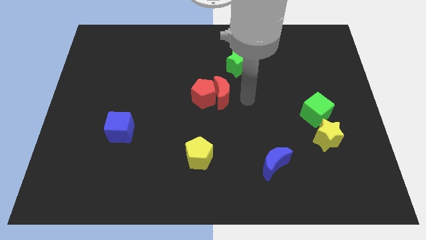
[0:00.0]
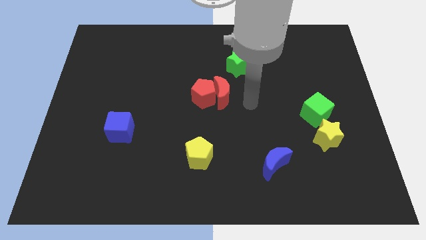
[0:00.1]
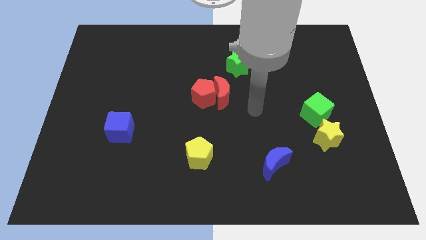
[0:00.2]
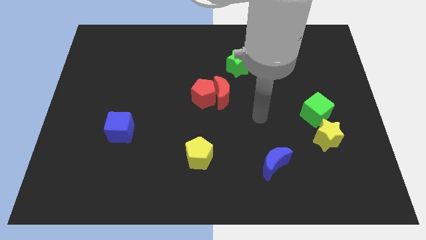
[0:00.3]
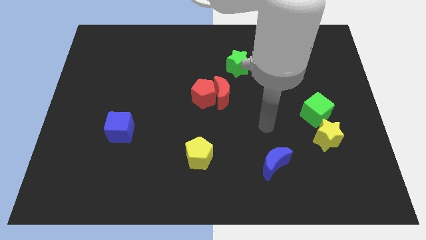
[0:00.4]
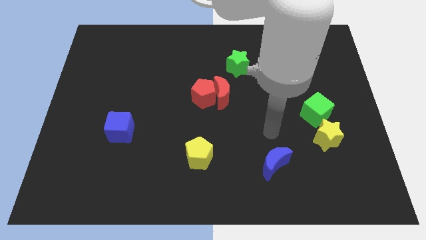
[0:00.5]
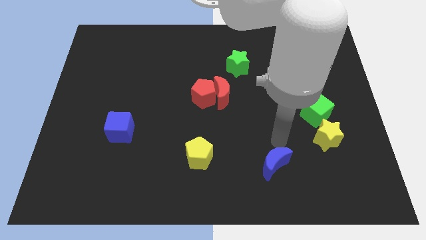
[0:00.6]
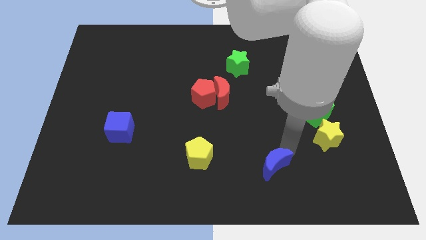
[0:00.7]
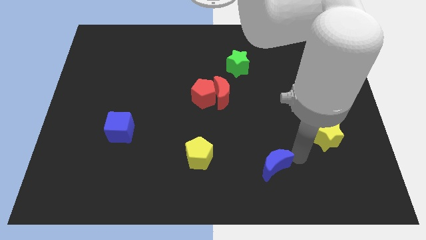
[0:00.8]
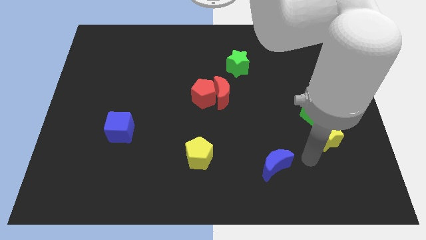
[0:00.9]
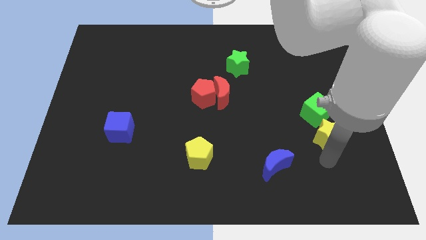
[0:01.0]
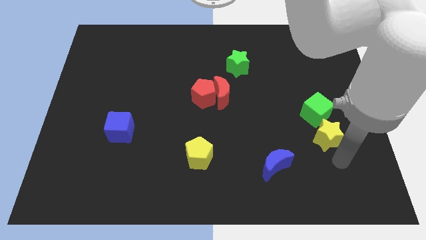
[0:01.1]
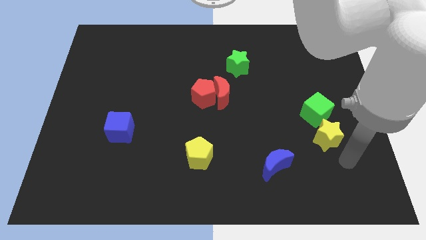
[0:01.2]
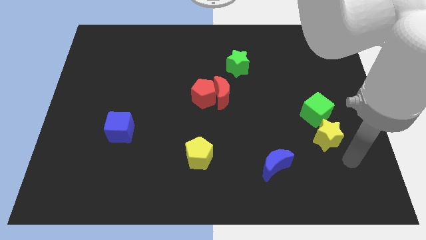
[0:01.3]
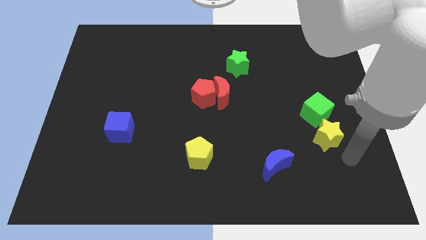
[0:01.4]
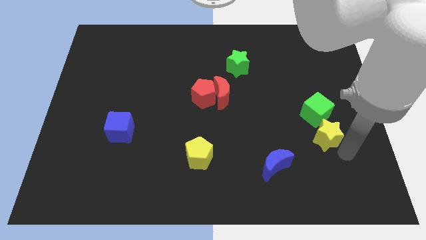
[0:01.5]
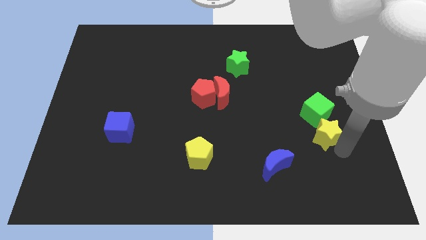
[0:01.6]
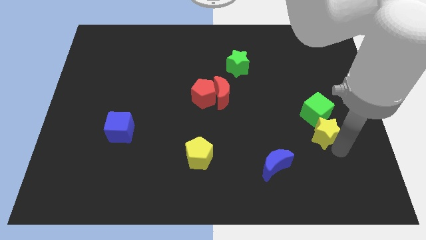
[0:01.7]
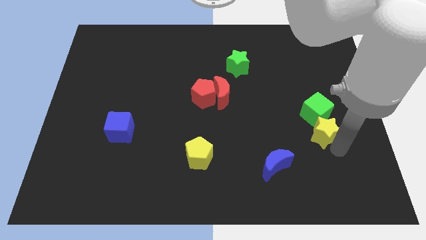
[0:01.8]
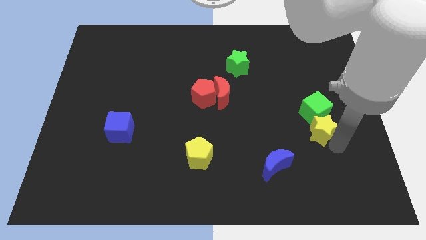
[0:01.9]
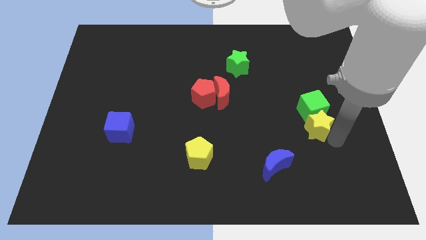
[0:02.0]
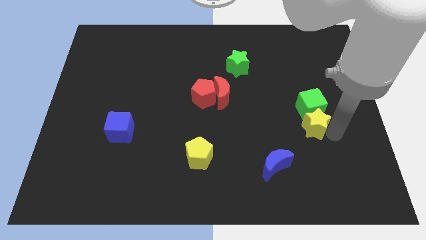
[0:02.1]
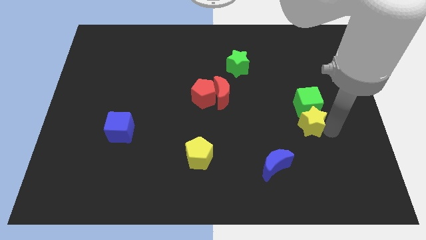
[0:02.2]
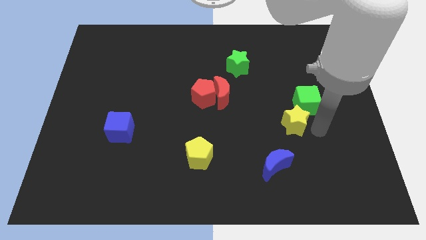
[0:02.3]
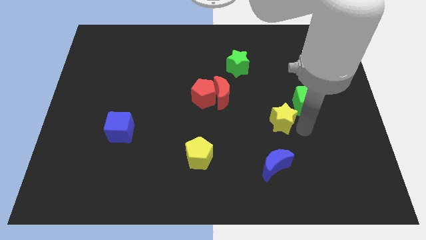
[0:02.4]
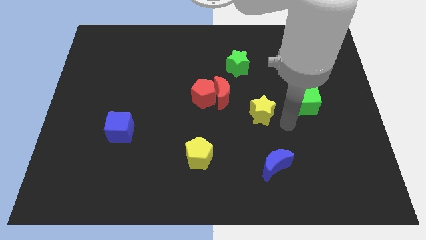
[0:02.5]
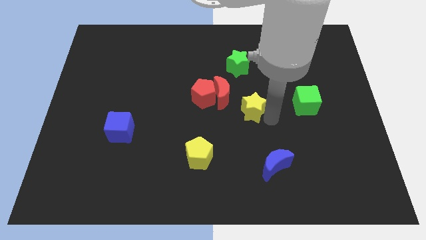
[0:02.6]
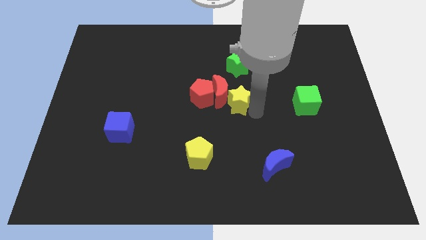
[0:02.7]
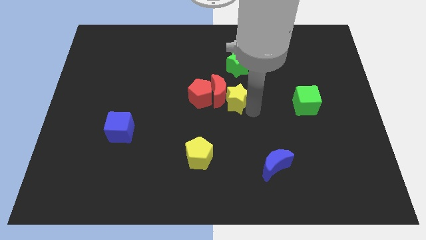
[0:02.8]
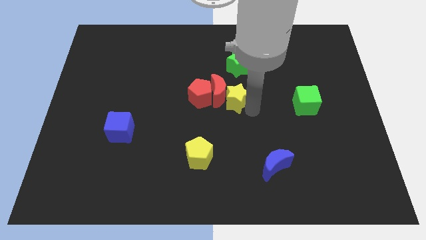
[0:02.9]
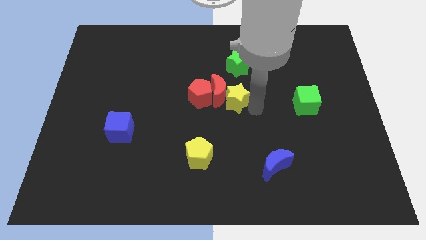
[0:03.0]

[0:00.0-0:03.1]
push the yellow star into the red crescent

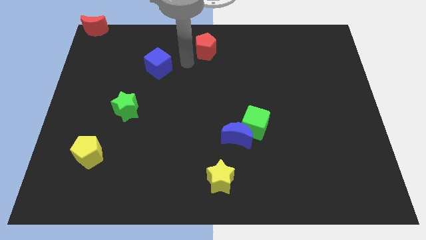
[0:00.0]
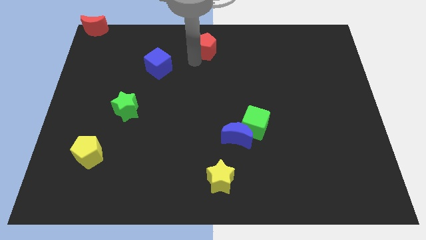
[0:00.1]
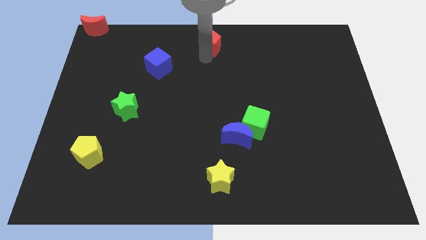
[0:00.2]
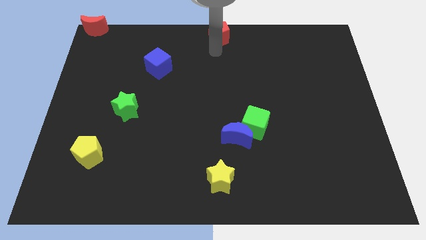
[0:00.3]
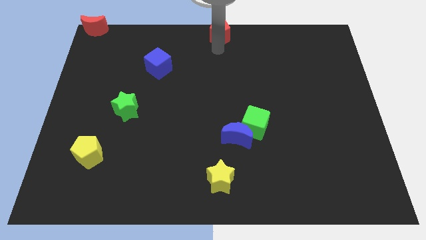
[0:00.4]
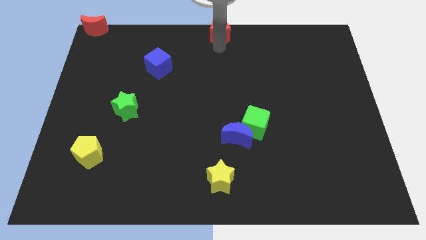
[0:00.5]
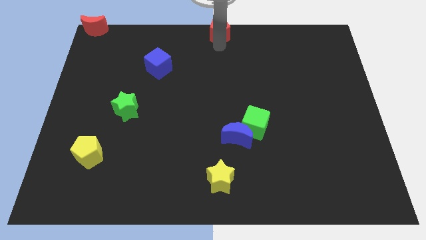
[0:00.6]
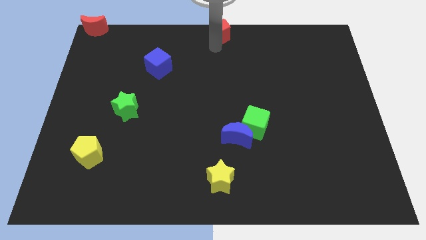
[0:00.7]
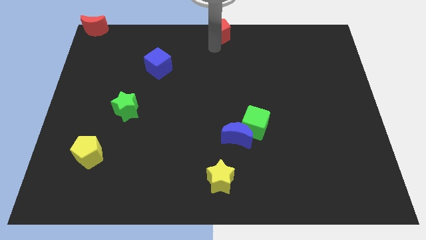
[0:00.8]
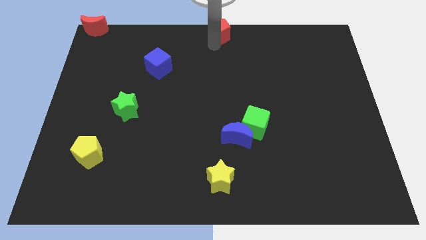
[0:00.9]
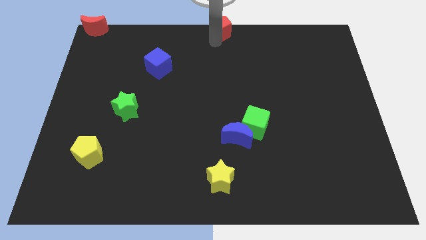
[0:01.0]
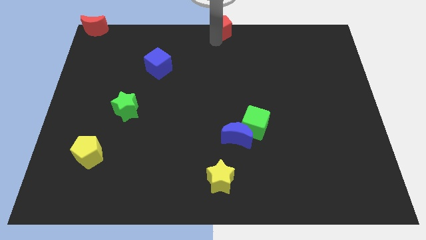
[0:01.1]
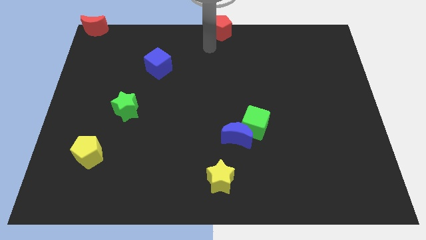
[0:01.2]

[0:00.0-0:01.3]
move the red pentagon to the top center of the board

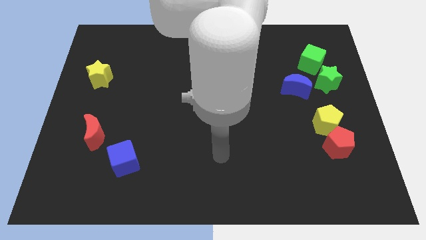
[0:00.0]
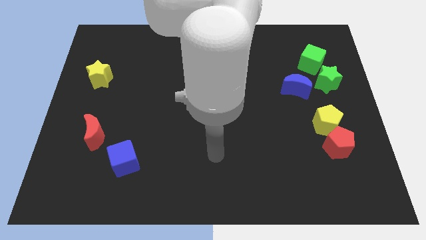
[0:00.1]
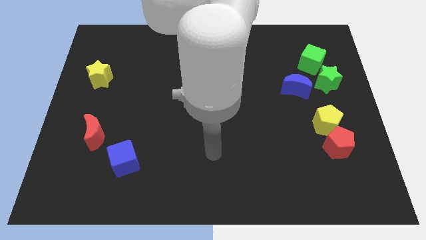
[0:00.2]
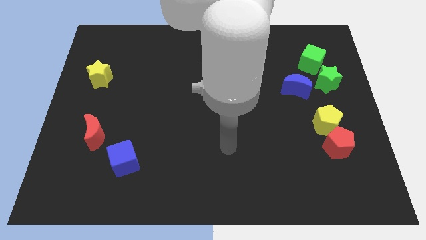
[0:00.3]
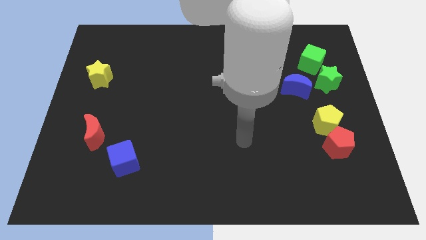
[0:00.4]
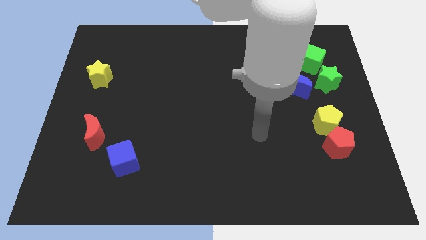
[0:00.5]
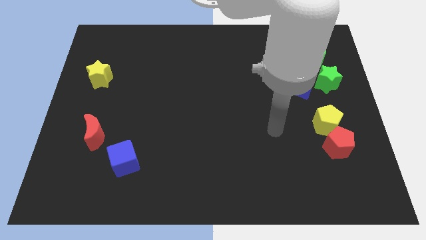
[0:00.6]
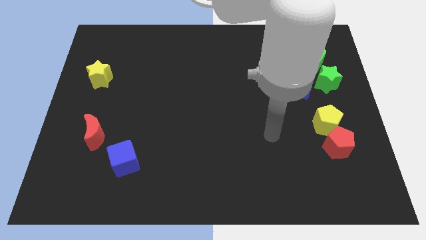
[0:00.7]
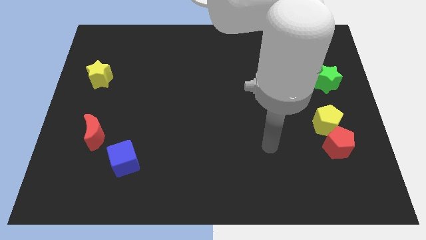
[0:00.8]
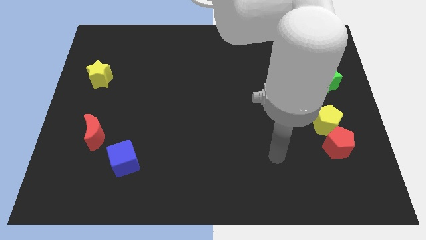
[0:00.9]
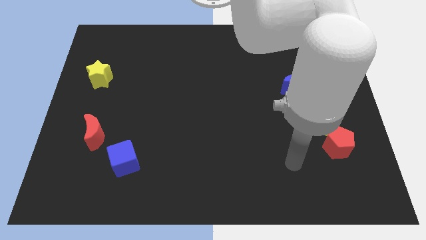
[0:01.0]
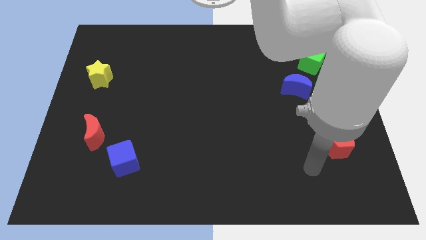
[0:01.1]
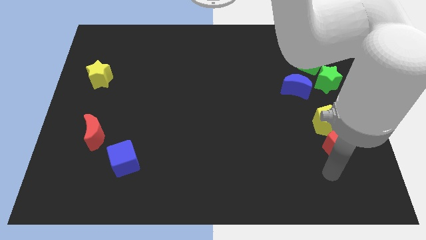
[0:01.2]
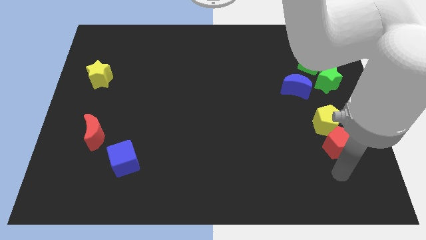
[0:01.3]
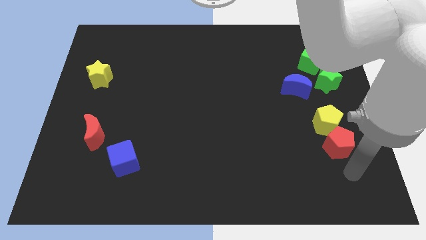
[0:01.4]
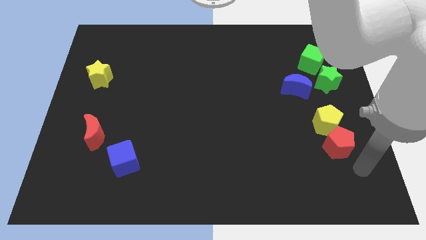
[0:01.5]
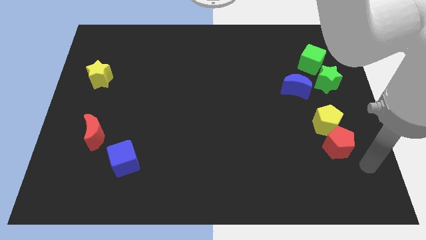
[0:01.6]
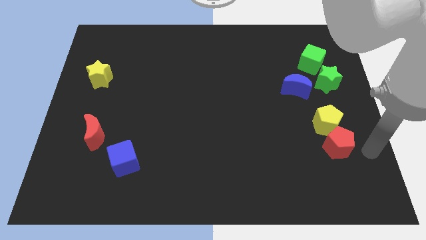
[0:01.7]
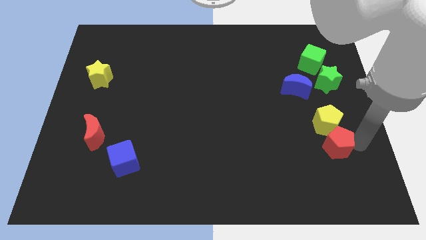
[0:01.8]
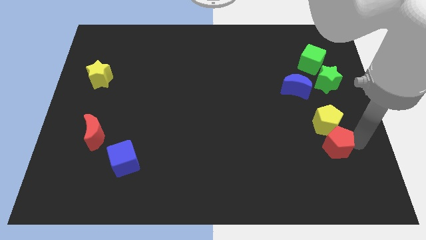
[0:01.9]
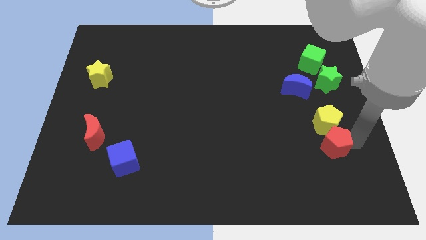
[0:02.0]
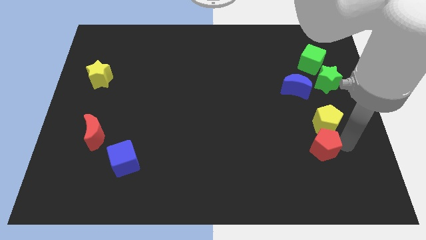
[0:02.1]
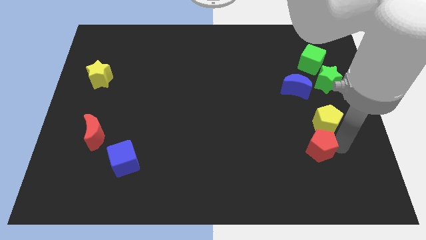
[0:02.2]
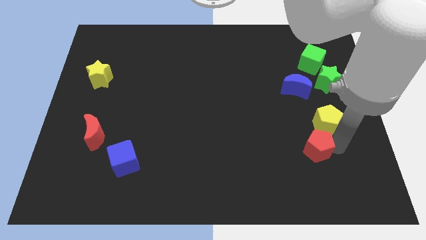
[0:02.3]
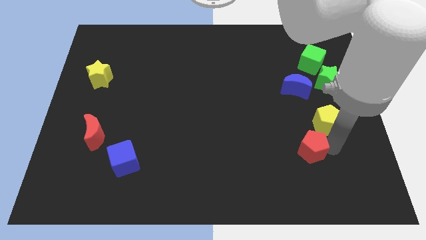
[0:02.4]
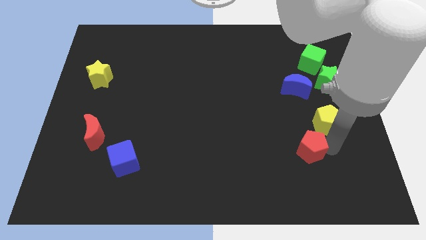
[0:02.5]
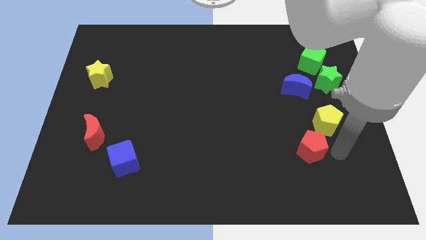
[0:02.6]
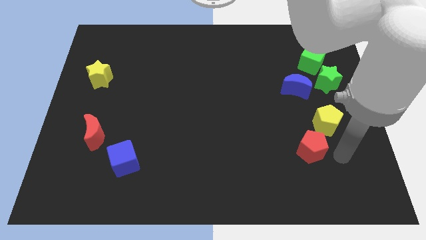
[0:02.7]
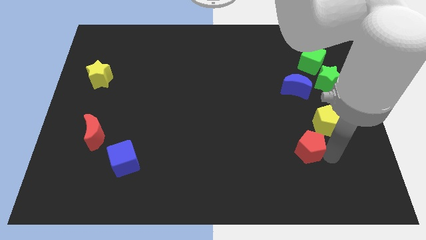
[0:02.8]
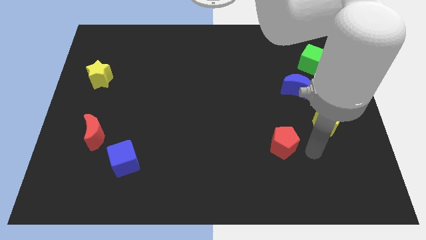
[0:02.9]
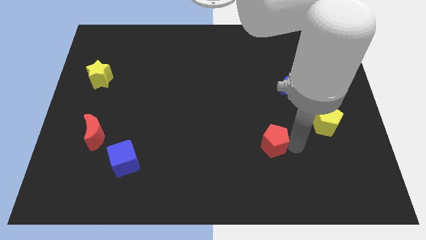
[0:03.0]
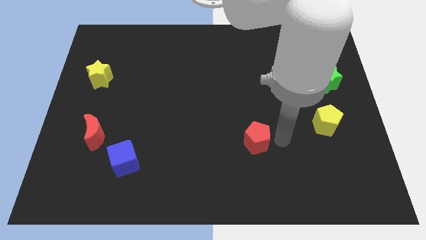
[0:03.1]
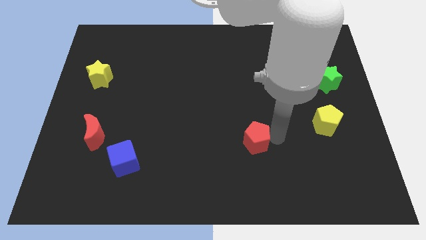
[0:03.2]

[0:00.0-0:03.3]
separate the red pentagon from the yellow pentagon

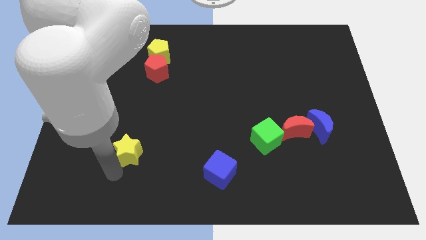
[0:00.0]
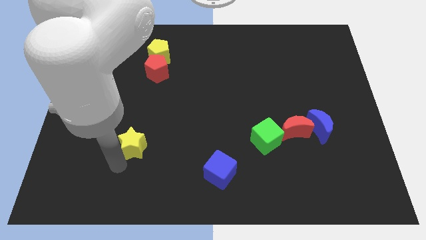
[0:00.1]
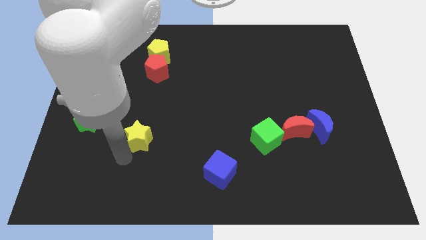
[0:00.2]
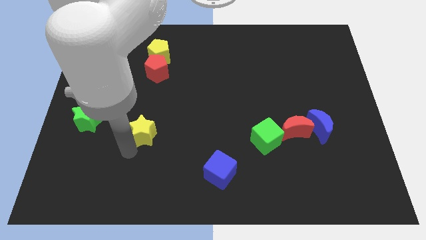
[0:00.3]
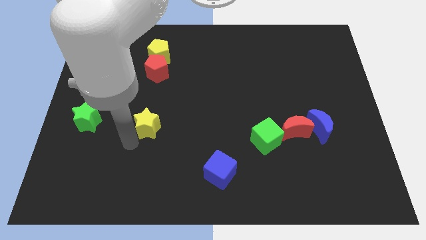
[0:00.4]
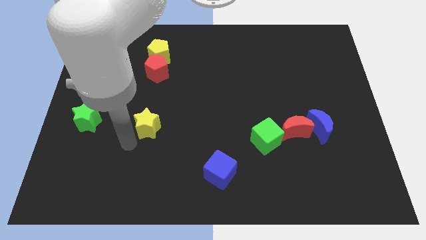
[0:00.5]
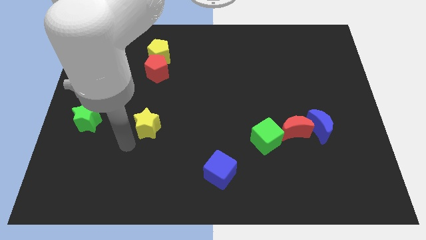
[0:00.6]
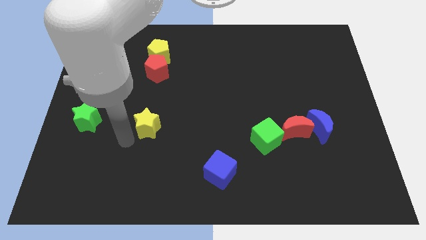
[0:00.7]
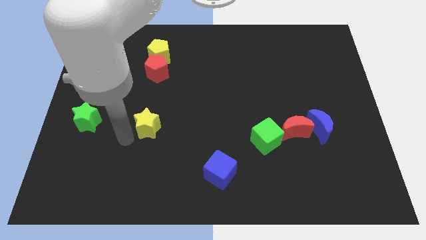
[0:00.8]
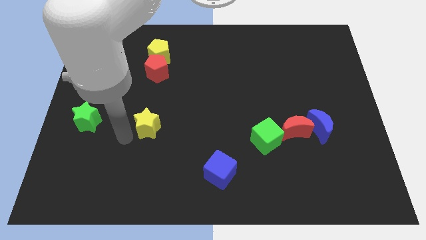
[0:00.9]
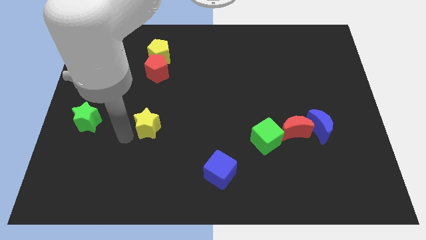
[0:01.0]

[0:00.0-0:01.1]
slightly push the yellow star to the top

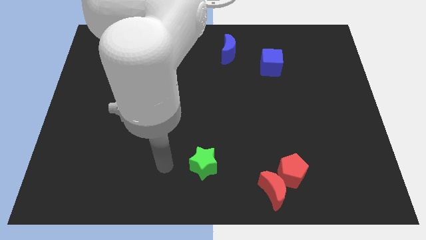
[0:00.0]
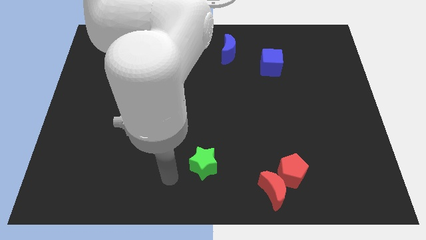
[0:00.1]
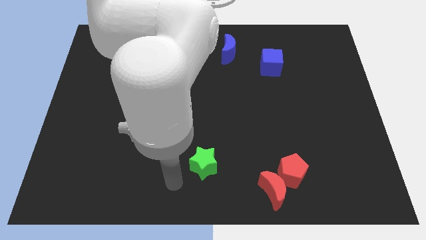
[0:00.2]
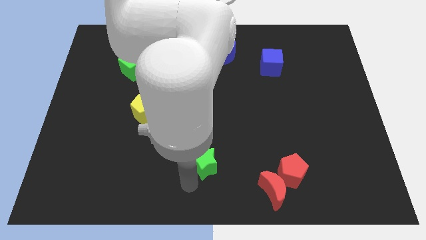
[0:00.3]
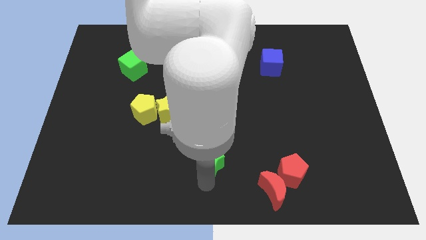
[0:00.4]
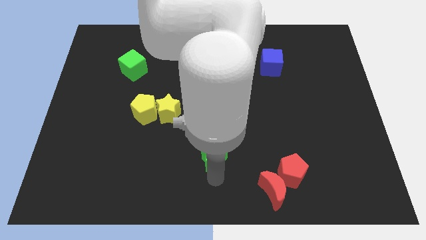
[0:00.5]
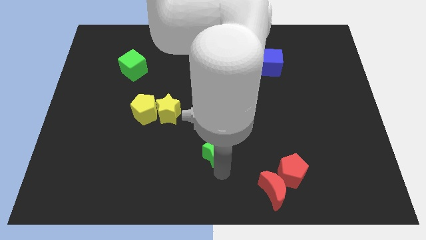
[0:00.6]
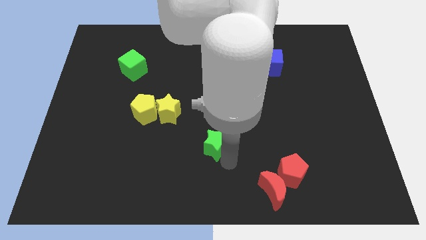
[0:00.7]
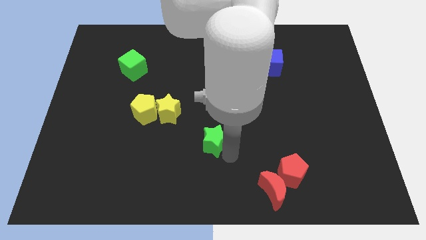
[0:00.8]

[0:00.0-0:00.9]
push the green star upward
